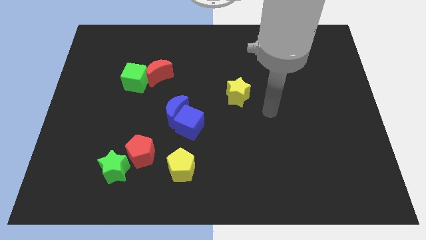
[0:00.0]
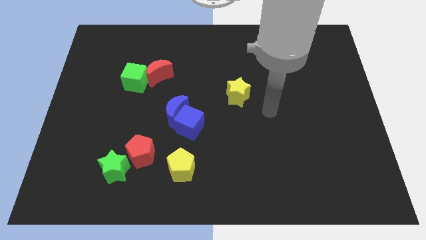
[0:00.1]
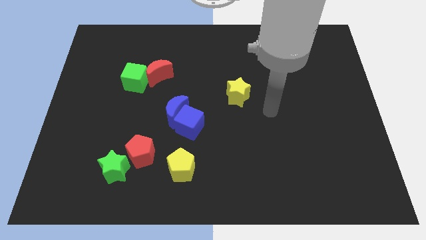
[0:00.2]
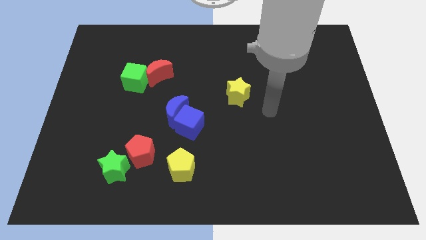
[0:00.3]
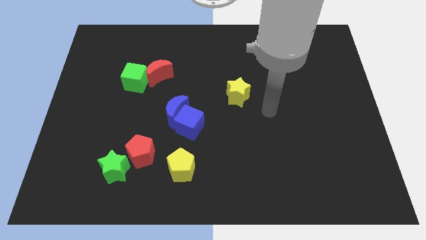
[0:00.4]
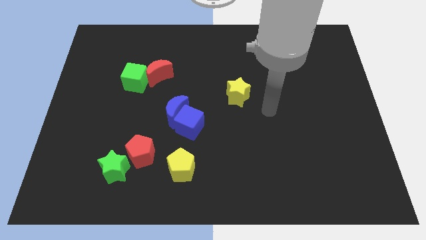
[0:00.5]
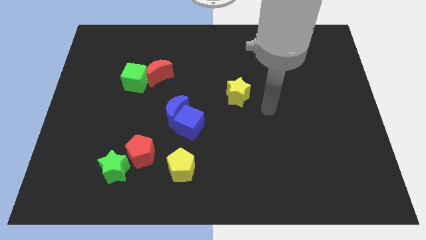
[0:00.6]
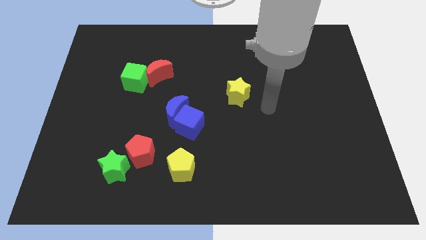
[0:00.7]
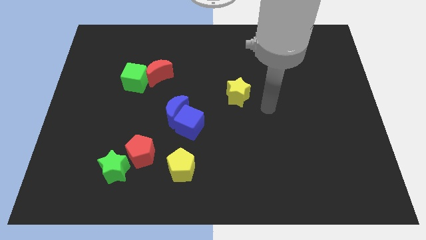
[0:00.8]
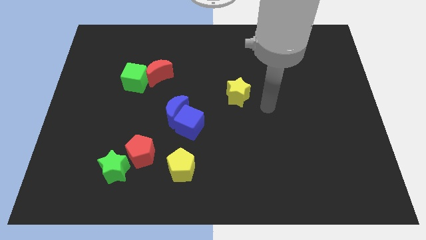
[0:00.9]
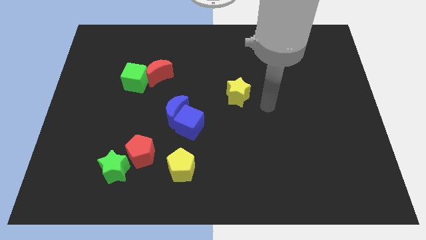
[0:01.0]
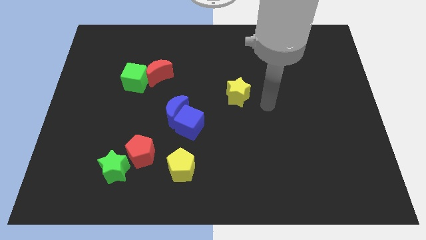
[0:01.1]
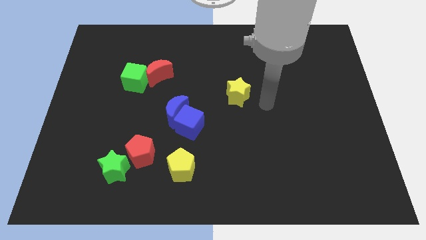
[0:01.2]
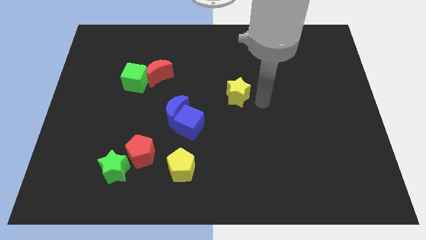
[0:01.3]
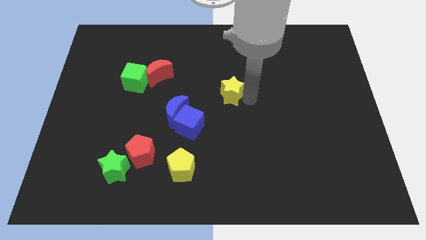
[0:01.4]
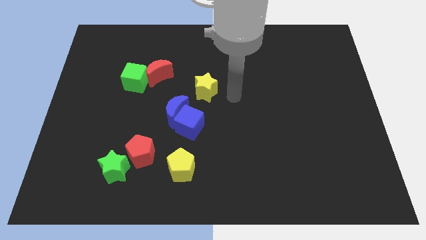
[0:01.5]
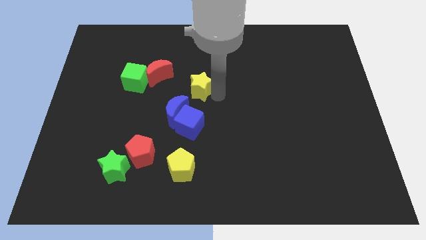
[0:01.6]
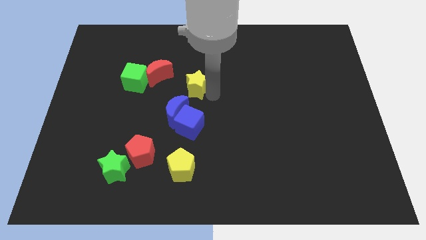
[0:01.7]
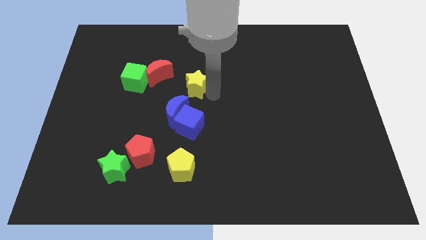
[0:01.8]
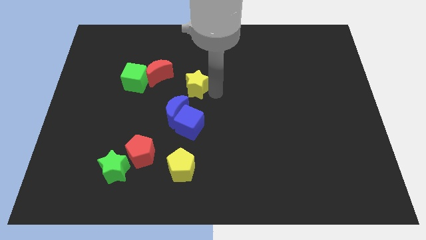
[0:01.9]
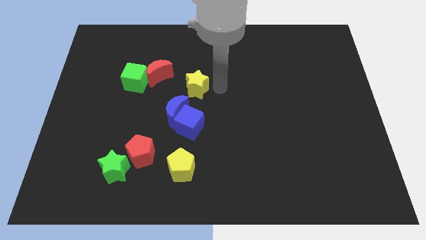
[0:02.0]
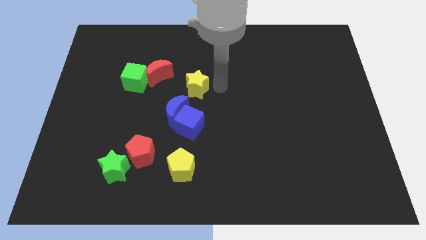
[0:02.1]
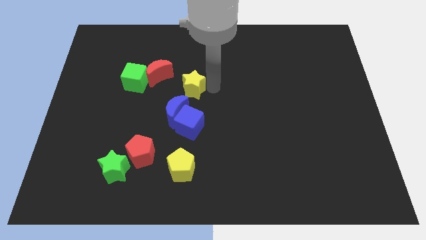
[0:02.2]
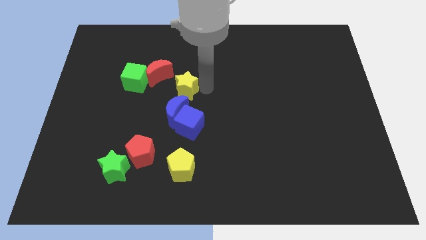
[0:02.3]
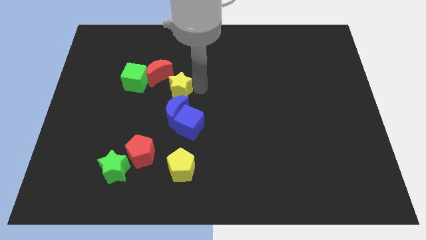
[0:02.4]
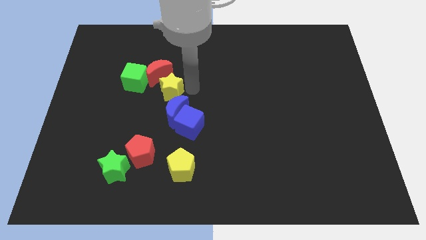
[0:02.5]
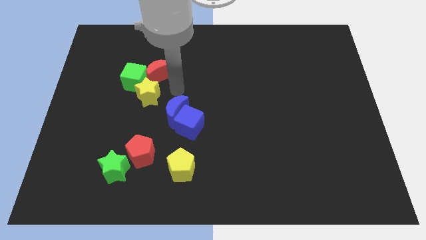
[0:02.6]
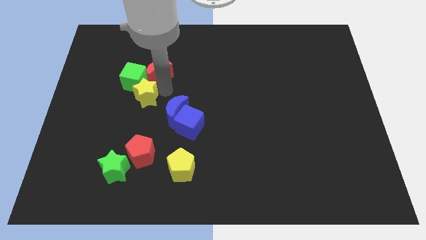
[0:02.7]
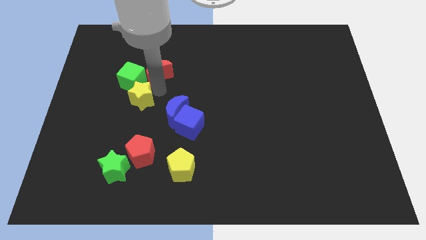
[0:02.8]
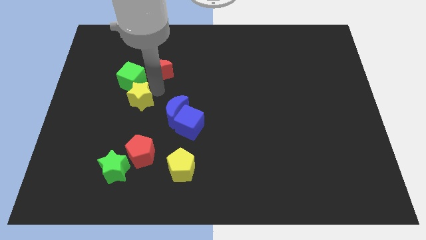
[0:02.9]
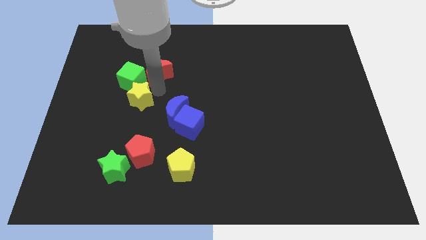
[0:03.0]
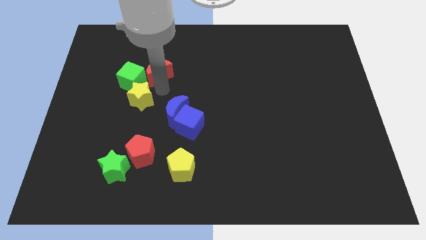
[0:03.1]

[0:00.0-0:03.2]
move the yellow star into the green cube

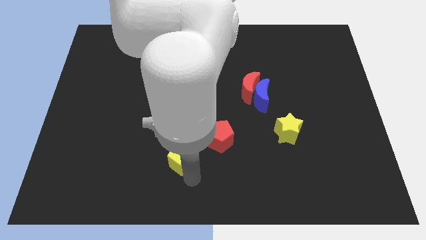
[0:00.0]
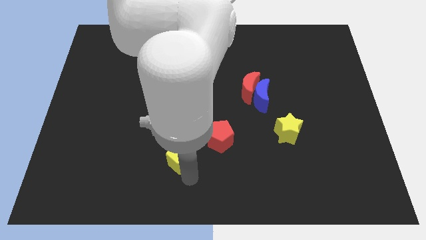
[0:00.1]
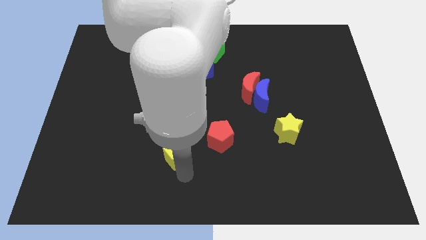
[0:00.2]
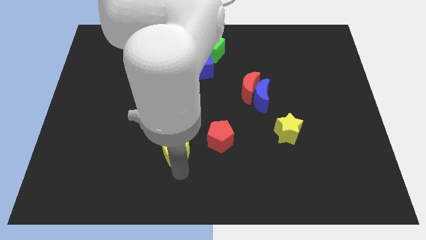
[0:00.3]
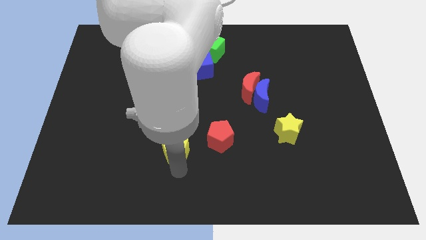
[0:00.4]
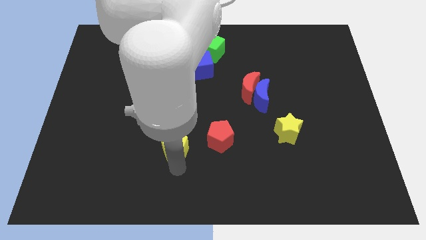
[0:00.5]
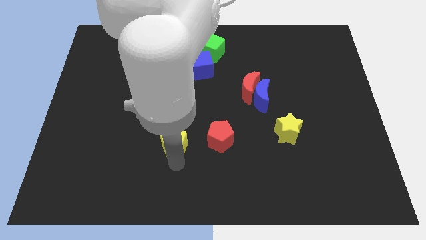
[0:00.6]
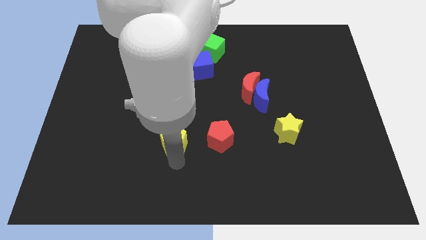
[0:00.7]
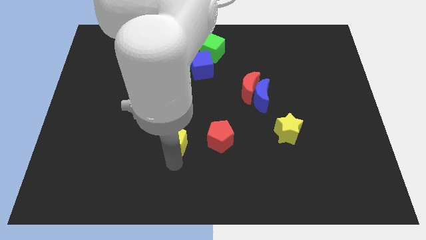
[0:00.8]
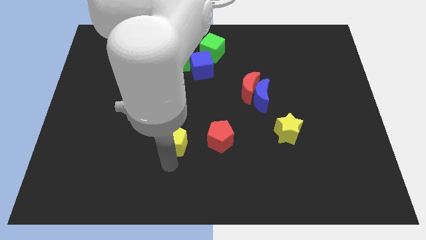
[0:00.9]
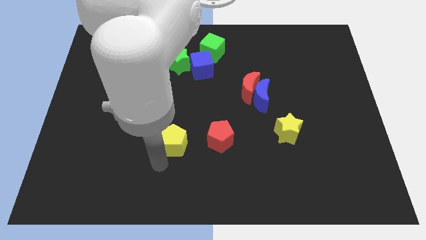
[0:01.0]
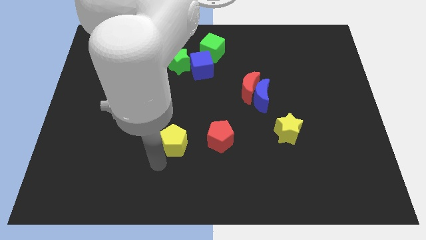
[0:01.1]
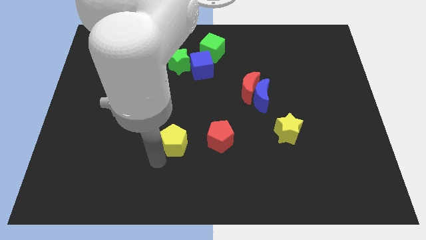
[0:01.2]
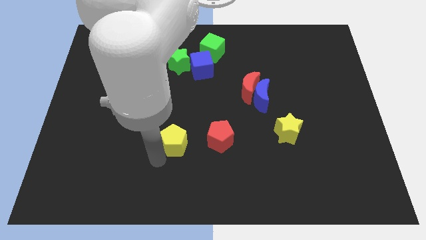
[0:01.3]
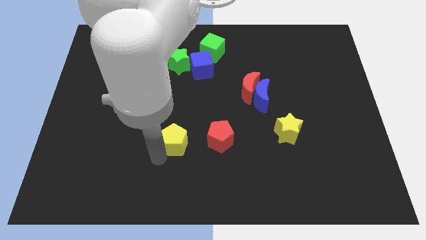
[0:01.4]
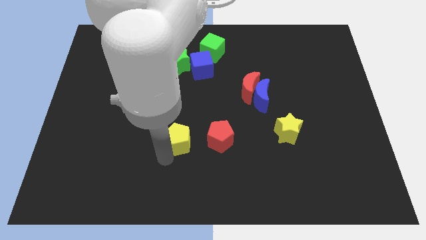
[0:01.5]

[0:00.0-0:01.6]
place yellow pentagon to the left of red pentagon

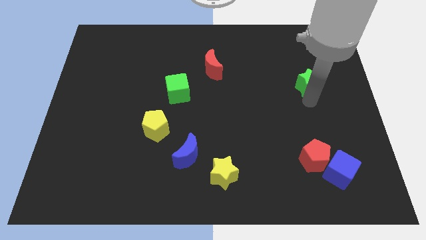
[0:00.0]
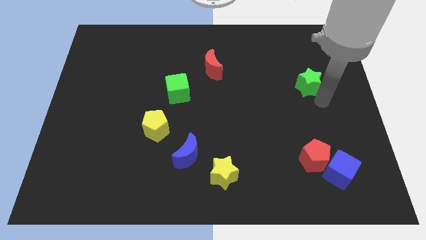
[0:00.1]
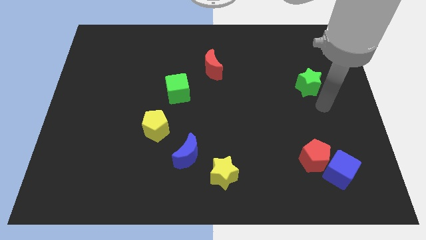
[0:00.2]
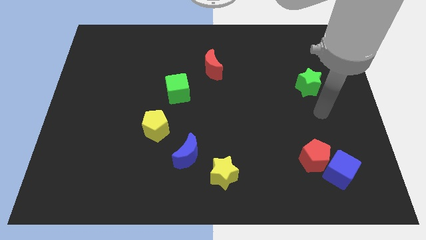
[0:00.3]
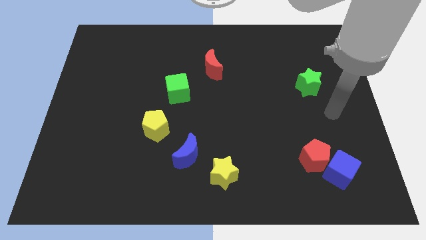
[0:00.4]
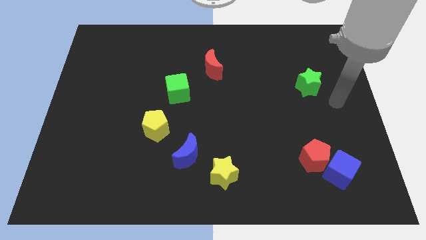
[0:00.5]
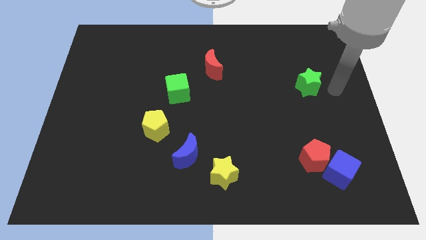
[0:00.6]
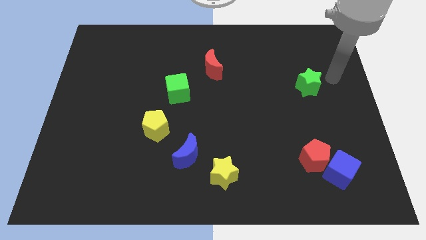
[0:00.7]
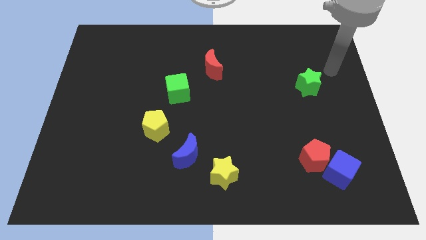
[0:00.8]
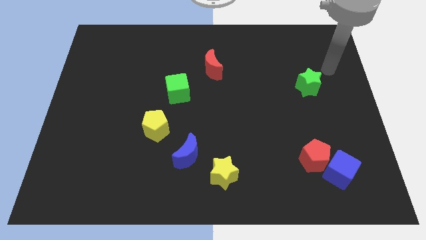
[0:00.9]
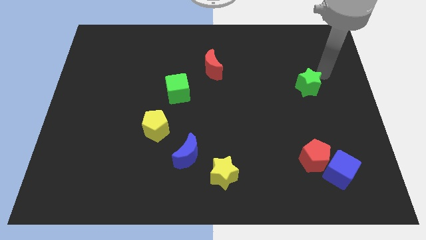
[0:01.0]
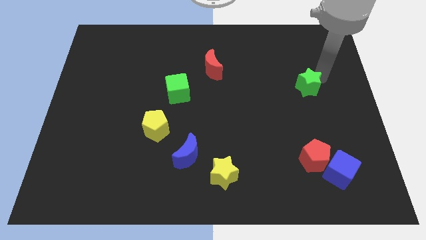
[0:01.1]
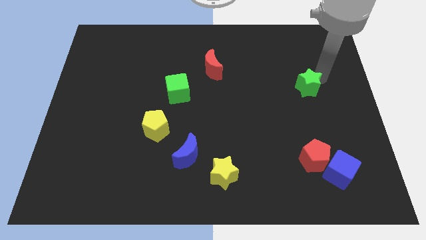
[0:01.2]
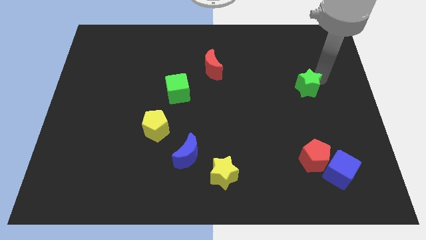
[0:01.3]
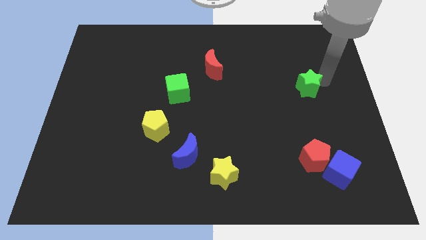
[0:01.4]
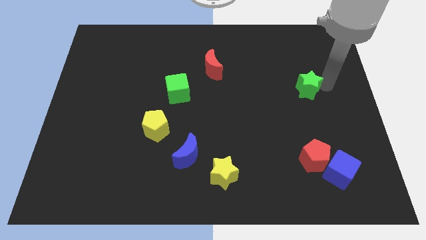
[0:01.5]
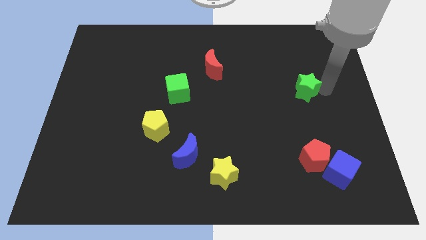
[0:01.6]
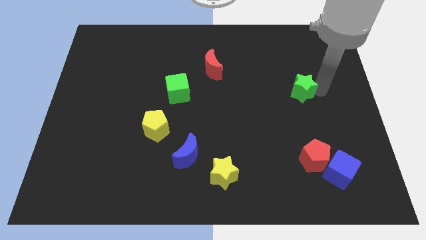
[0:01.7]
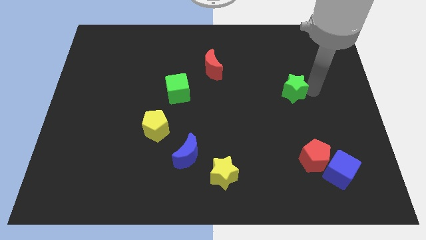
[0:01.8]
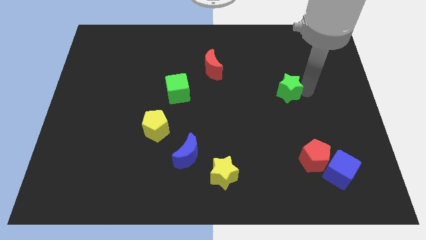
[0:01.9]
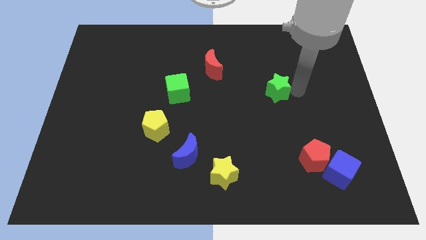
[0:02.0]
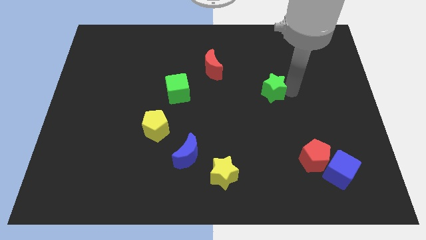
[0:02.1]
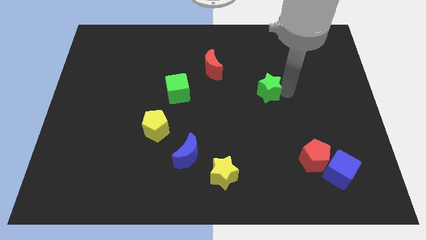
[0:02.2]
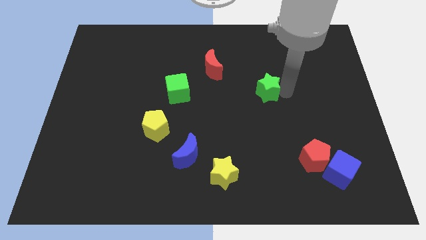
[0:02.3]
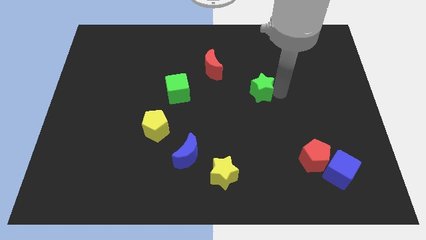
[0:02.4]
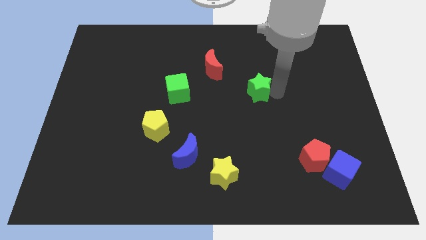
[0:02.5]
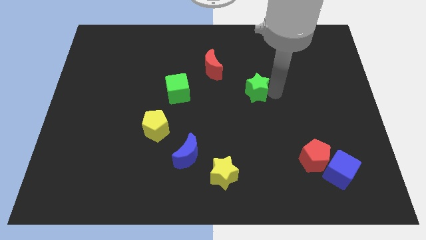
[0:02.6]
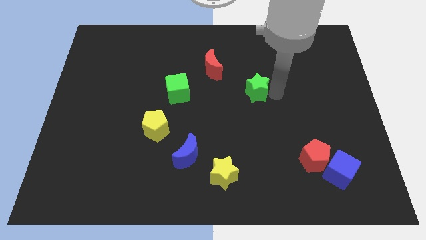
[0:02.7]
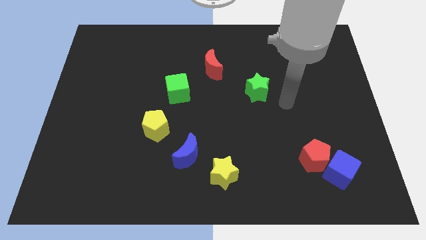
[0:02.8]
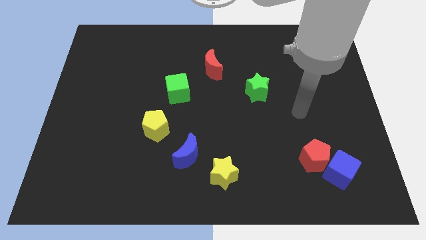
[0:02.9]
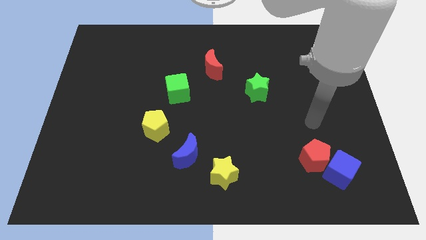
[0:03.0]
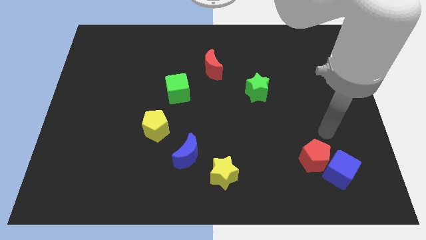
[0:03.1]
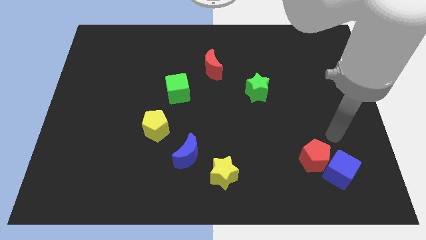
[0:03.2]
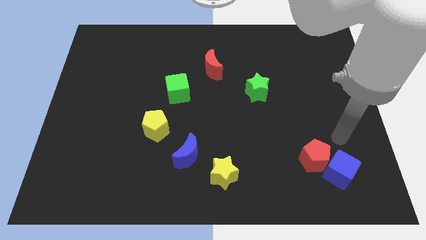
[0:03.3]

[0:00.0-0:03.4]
slide the green star towards left a bit

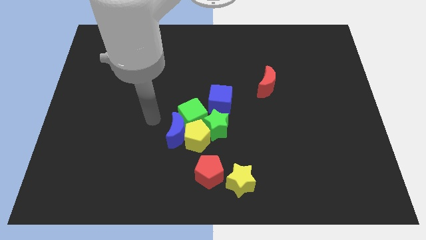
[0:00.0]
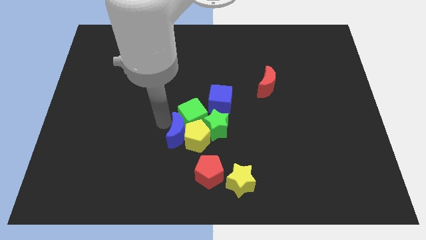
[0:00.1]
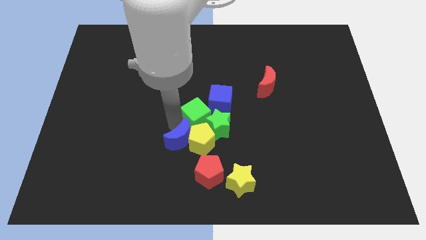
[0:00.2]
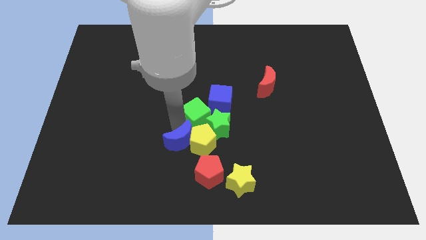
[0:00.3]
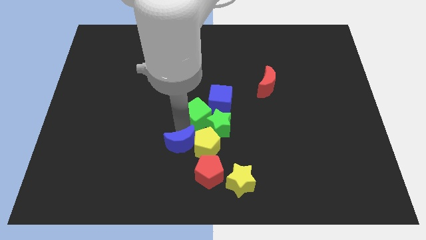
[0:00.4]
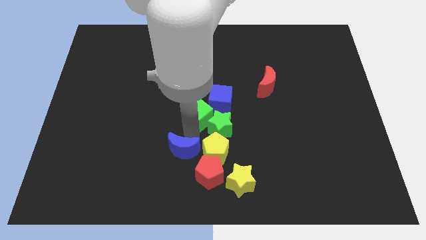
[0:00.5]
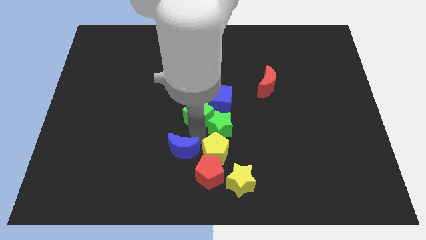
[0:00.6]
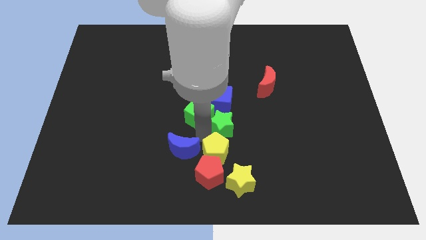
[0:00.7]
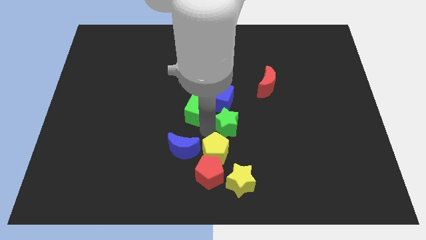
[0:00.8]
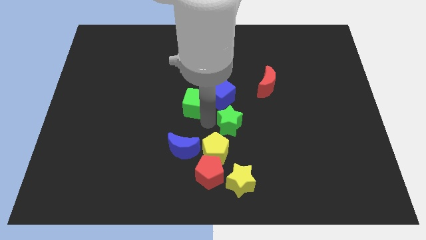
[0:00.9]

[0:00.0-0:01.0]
touch the bottom of green cube
